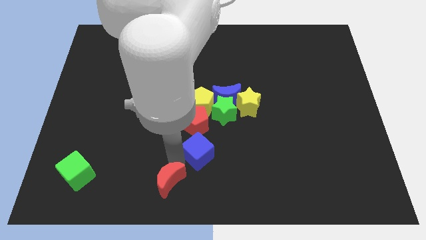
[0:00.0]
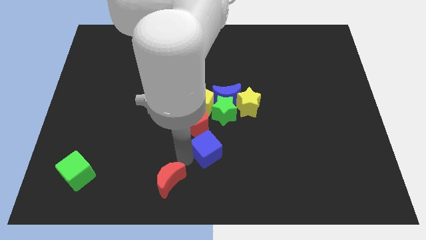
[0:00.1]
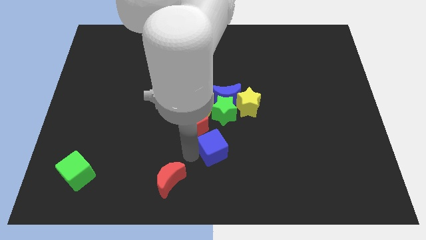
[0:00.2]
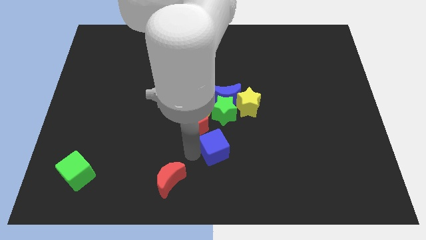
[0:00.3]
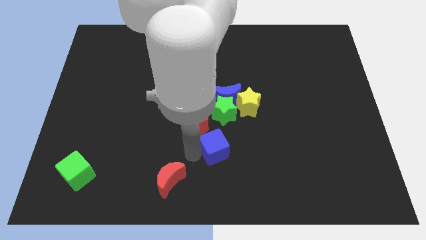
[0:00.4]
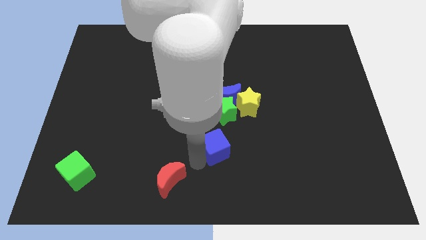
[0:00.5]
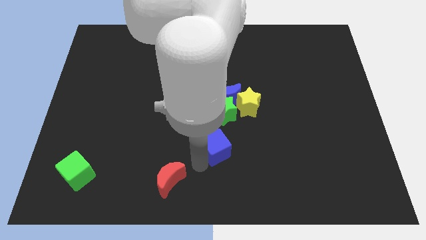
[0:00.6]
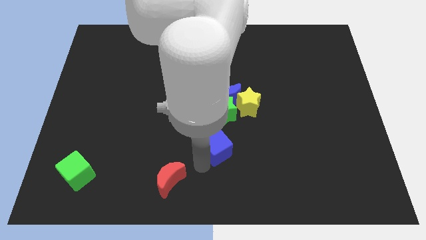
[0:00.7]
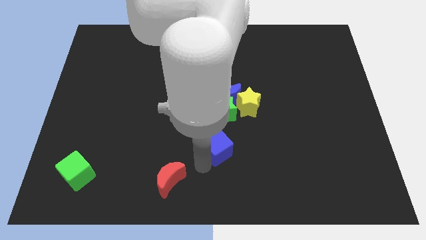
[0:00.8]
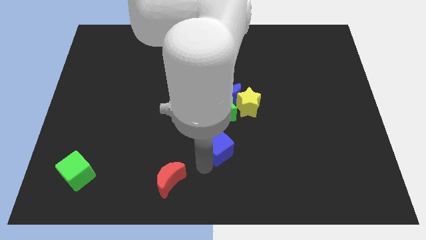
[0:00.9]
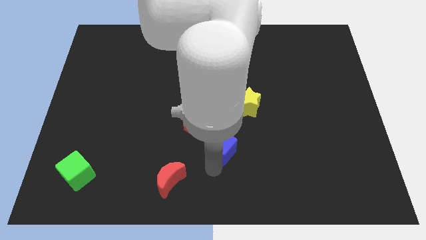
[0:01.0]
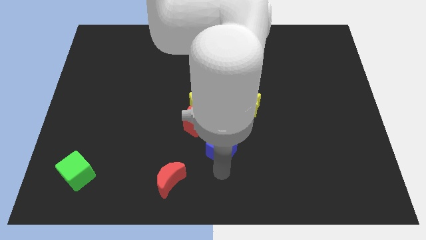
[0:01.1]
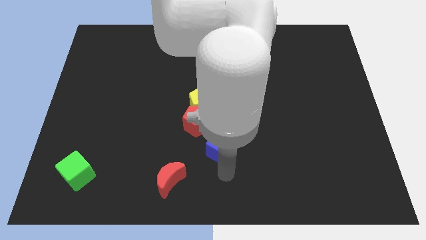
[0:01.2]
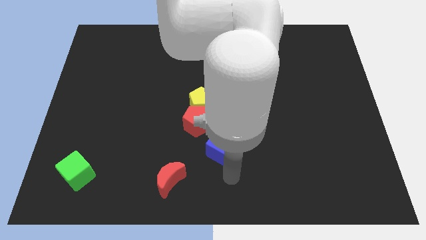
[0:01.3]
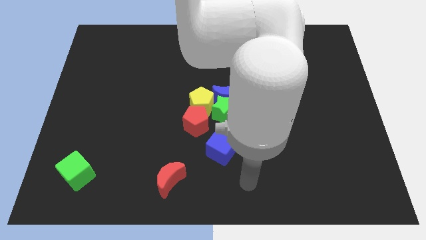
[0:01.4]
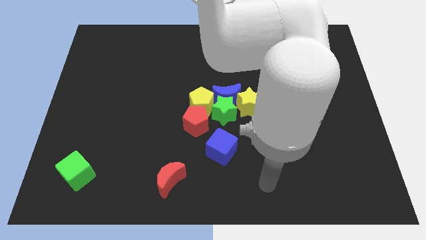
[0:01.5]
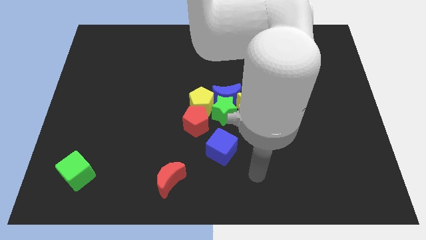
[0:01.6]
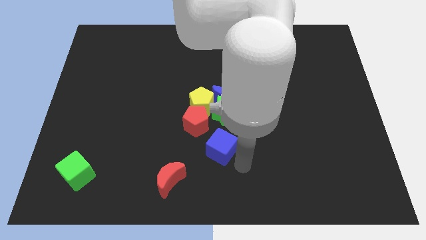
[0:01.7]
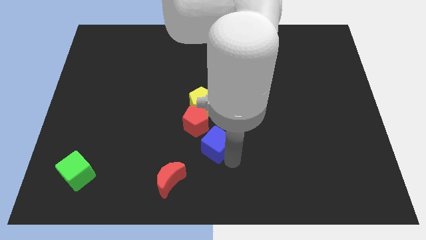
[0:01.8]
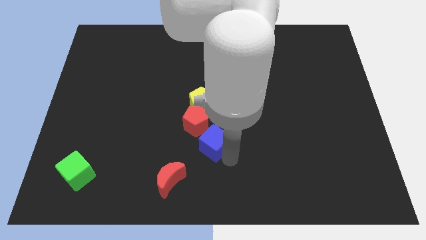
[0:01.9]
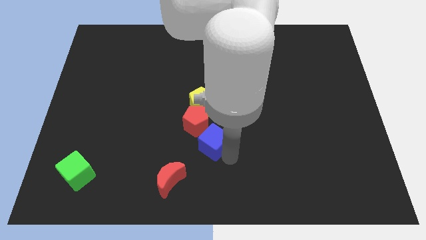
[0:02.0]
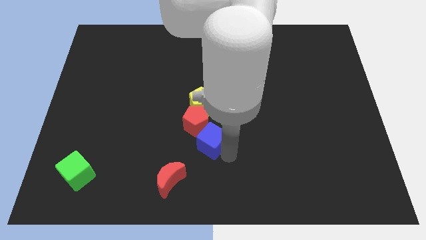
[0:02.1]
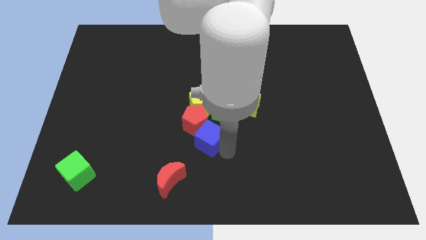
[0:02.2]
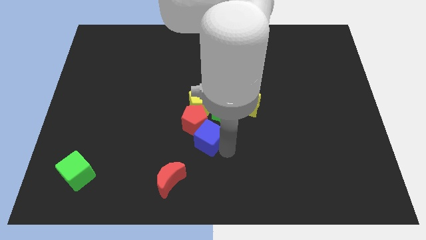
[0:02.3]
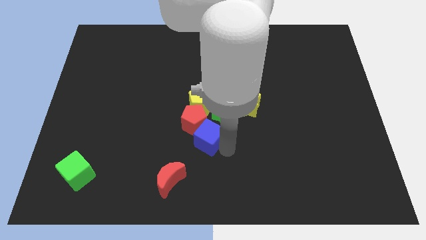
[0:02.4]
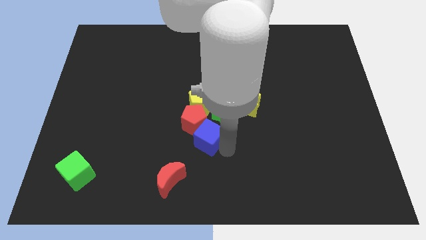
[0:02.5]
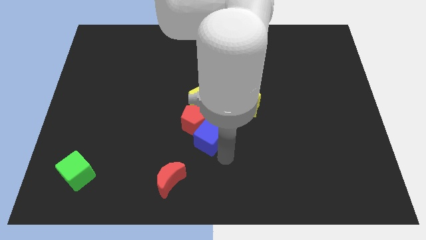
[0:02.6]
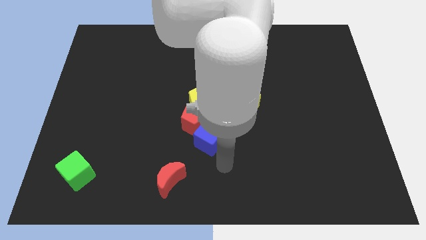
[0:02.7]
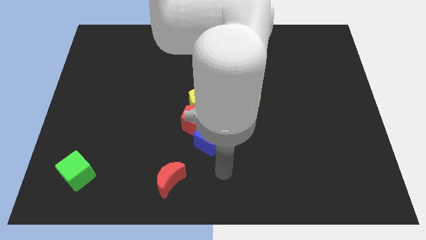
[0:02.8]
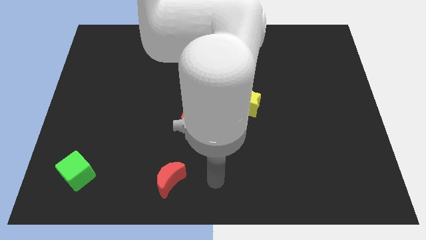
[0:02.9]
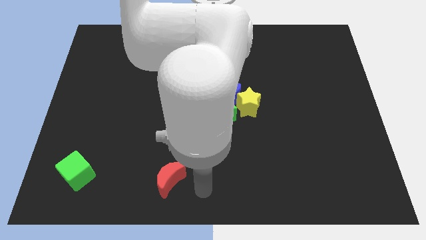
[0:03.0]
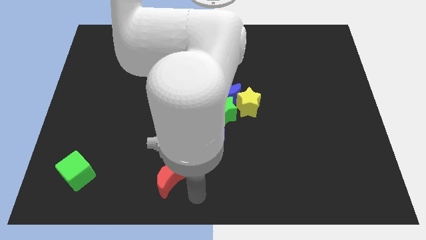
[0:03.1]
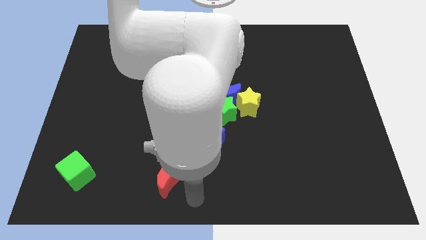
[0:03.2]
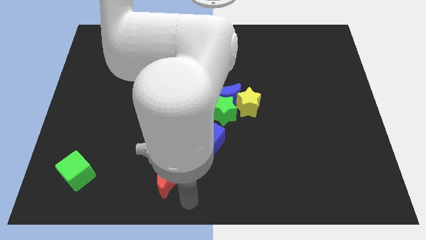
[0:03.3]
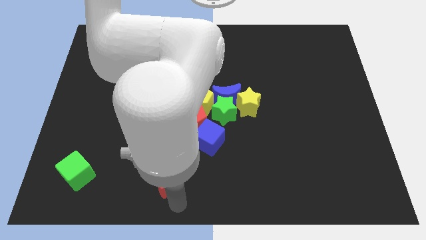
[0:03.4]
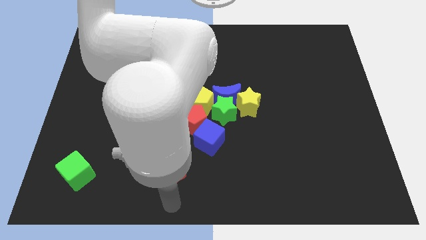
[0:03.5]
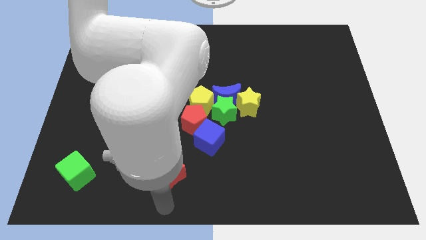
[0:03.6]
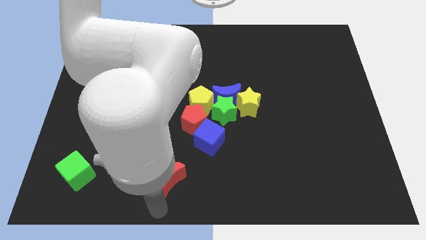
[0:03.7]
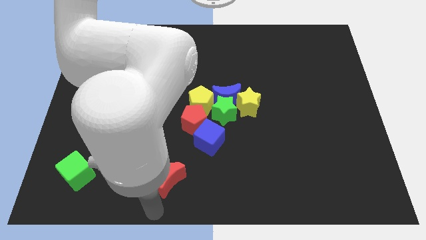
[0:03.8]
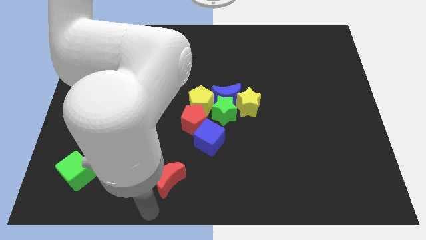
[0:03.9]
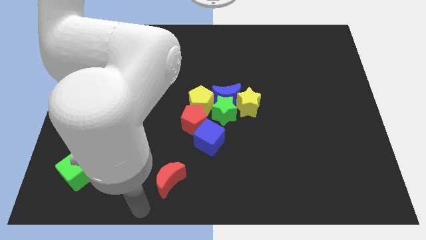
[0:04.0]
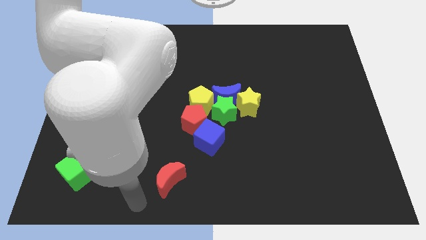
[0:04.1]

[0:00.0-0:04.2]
push the blue cube towards the red pentagon

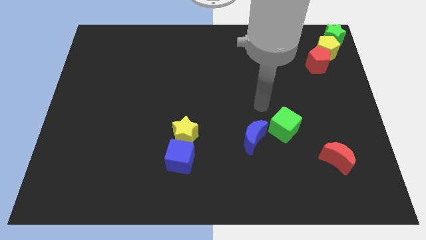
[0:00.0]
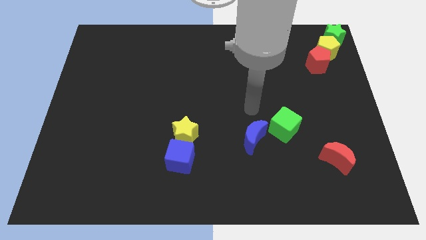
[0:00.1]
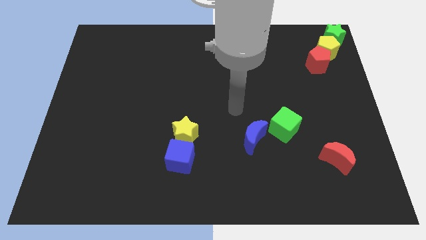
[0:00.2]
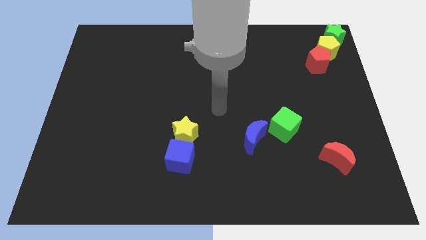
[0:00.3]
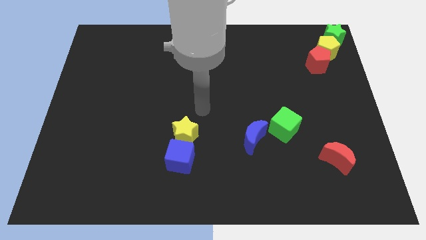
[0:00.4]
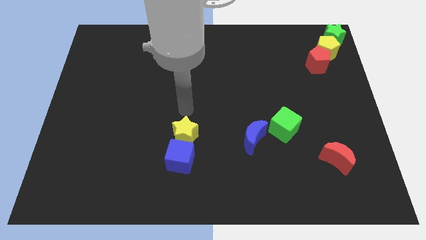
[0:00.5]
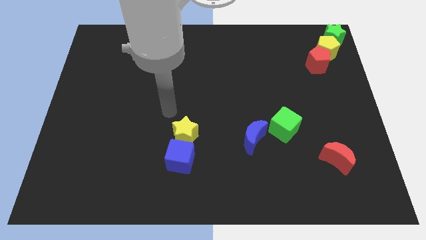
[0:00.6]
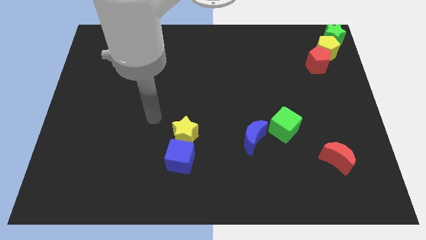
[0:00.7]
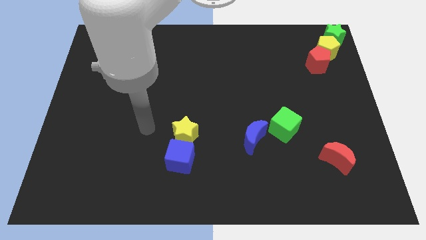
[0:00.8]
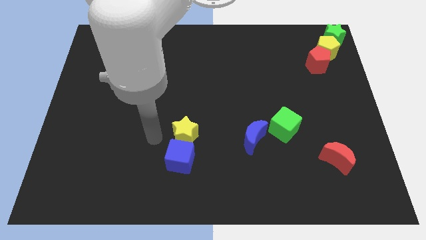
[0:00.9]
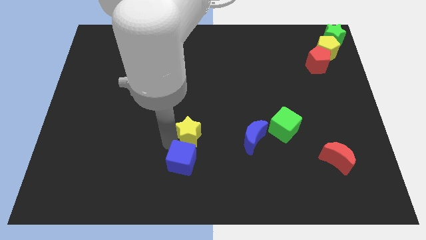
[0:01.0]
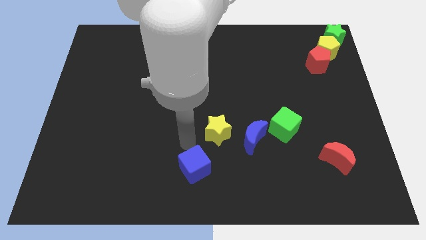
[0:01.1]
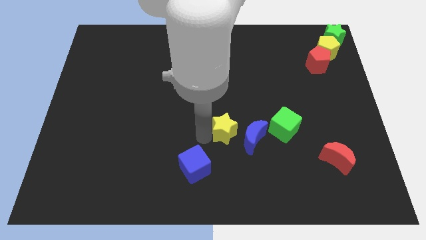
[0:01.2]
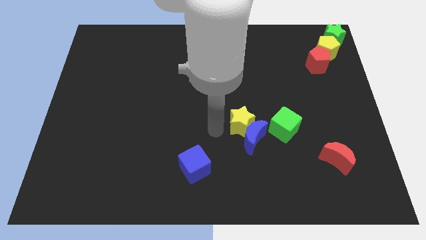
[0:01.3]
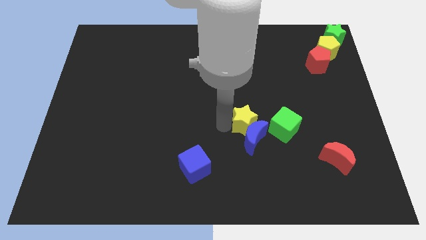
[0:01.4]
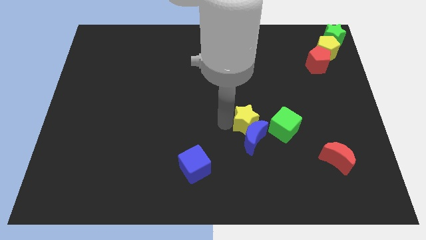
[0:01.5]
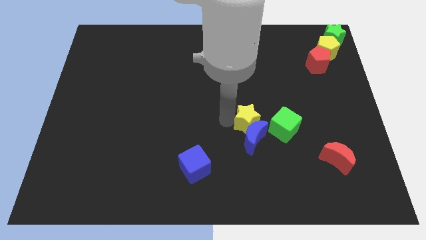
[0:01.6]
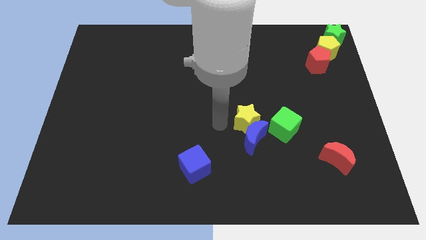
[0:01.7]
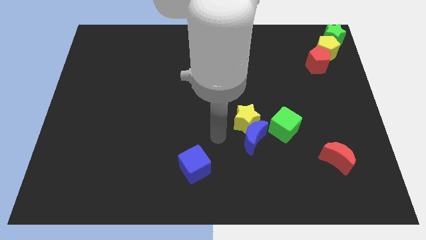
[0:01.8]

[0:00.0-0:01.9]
push the yellow star into the blue crescent

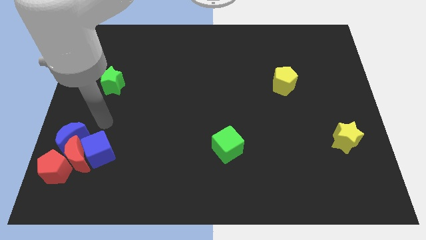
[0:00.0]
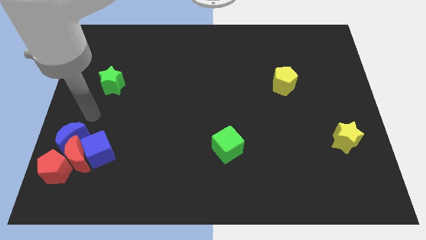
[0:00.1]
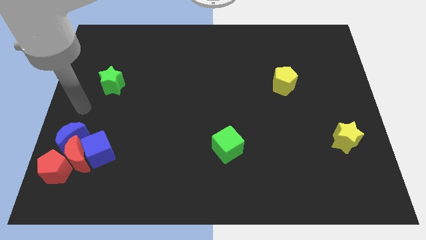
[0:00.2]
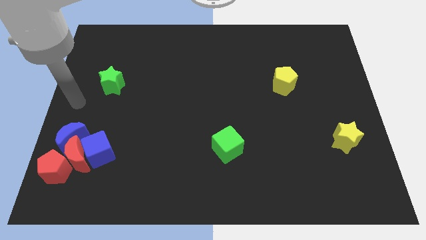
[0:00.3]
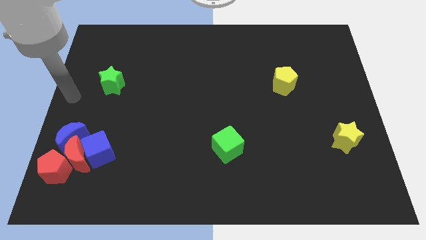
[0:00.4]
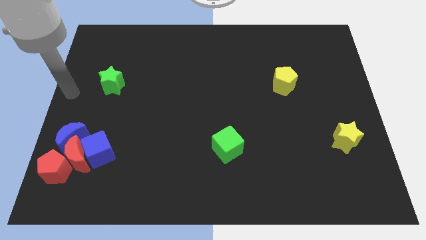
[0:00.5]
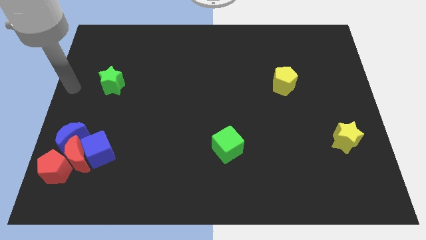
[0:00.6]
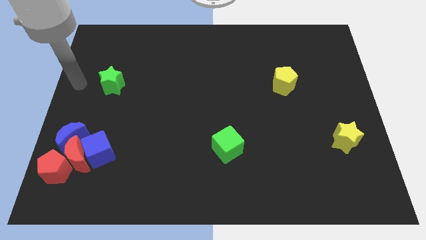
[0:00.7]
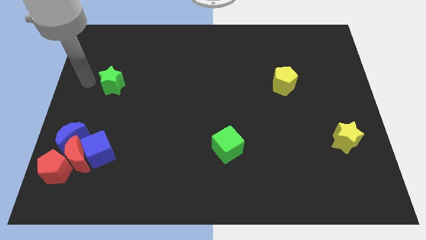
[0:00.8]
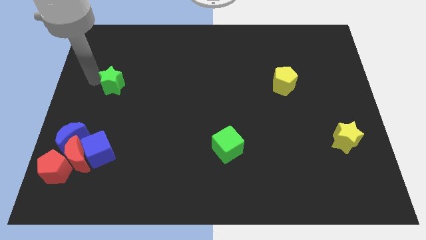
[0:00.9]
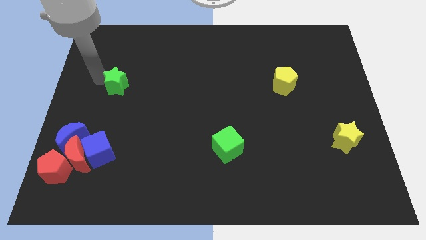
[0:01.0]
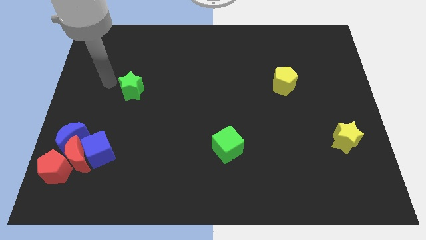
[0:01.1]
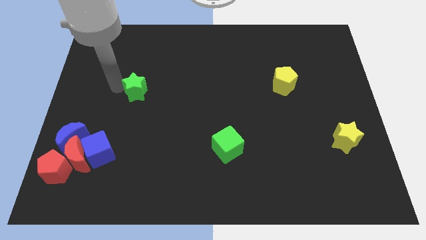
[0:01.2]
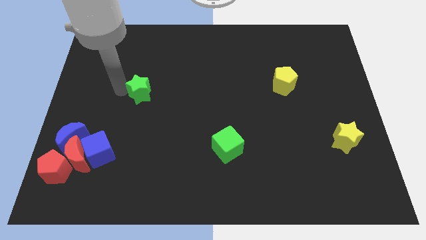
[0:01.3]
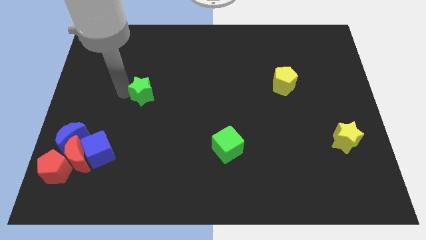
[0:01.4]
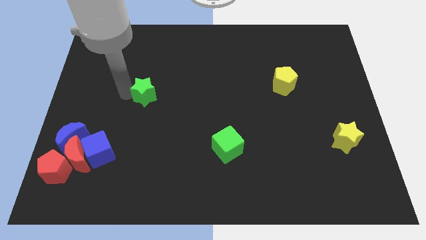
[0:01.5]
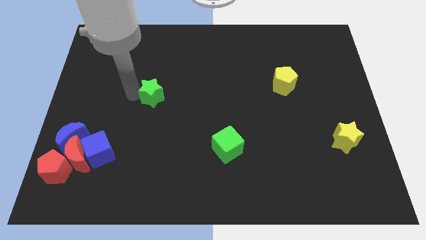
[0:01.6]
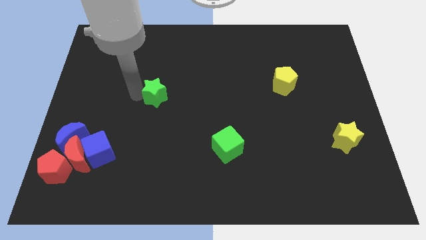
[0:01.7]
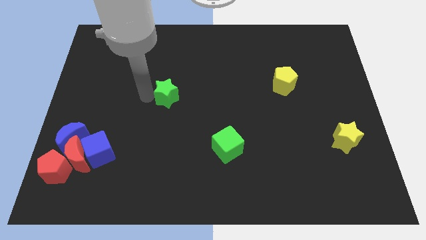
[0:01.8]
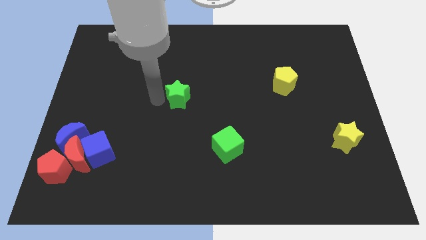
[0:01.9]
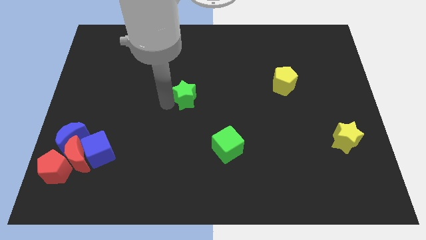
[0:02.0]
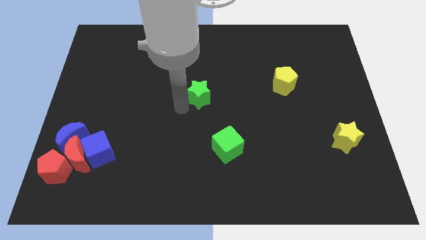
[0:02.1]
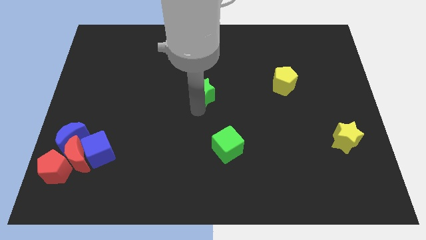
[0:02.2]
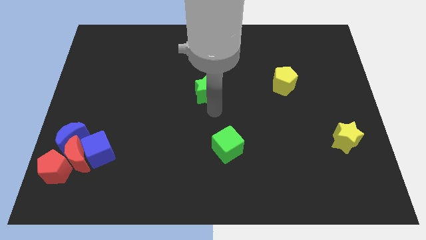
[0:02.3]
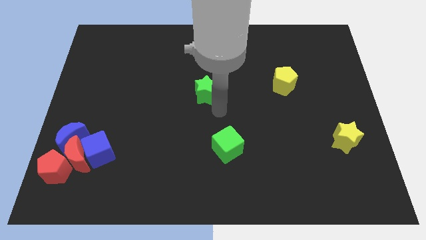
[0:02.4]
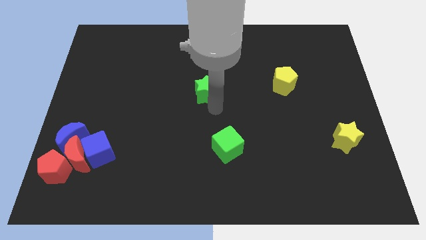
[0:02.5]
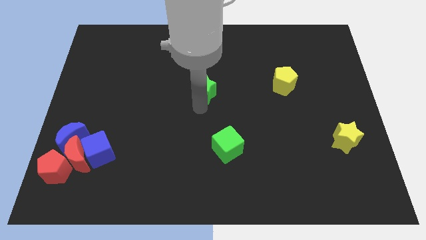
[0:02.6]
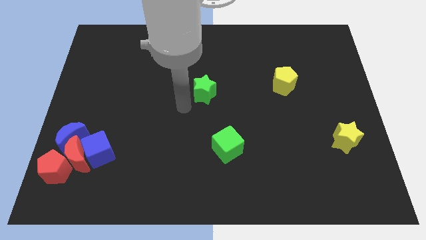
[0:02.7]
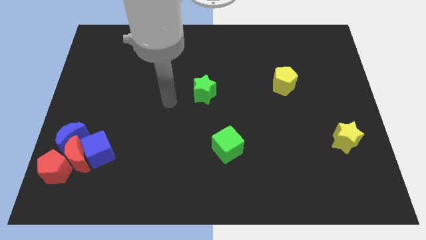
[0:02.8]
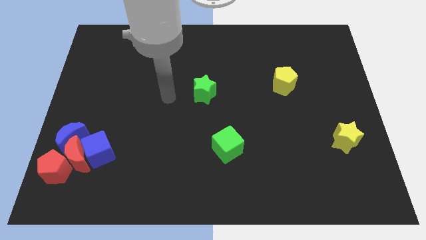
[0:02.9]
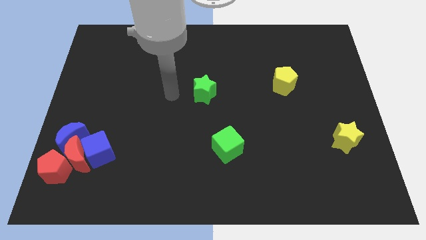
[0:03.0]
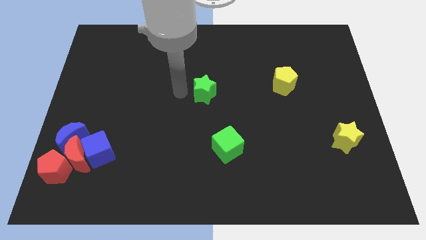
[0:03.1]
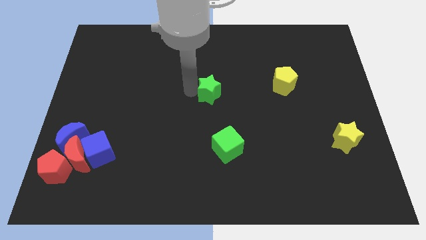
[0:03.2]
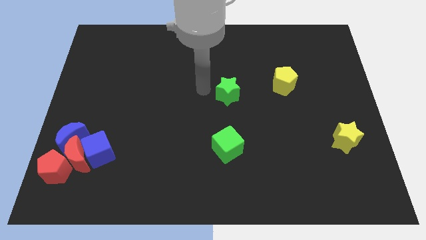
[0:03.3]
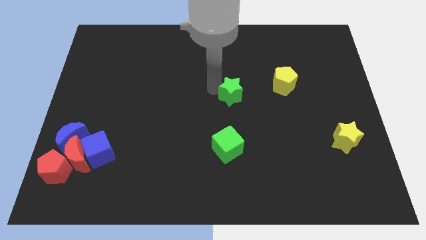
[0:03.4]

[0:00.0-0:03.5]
place the green star left to the yellow pentagon
